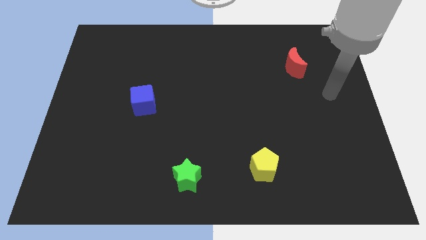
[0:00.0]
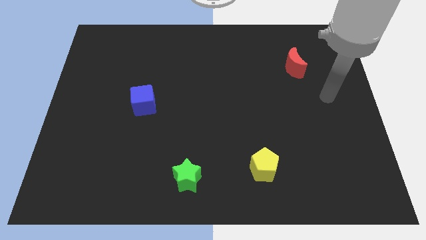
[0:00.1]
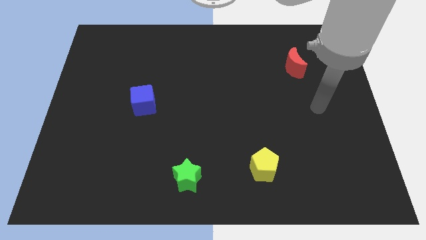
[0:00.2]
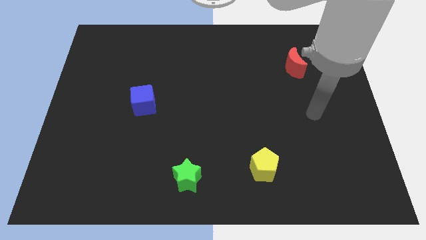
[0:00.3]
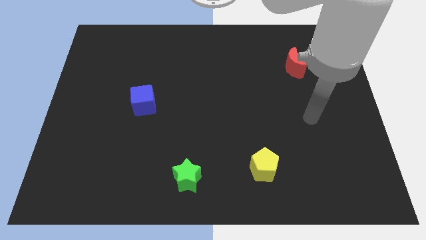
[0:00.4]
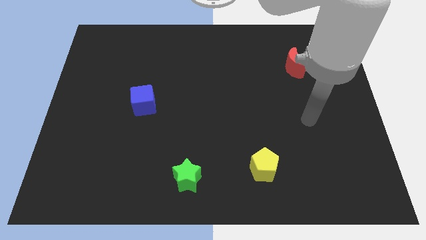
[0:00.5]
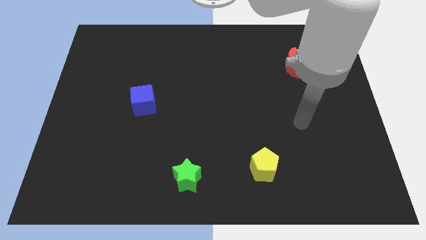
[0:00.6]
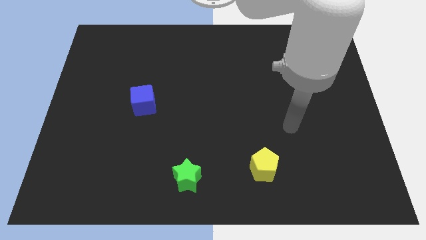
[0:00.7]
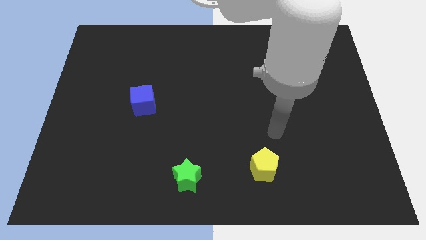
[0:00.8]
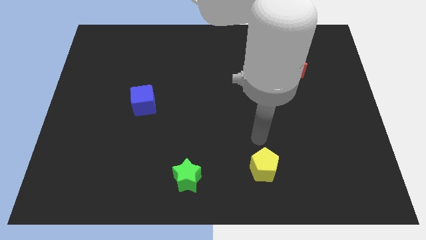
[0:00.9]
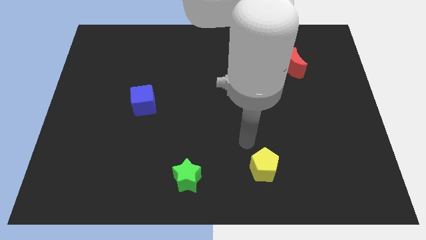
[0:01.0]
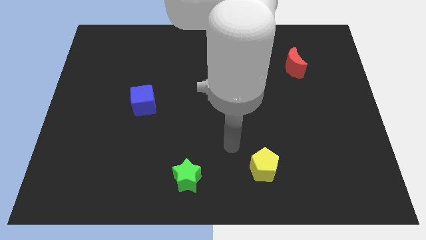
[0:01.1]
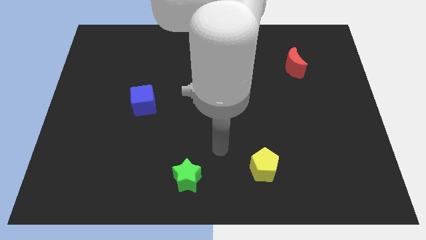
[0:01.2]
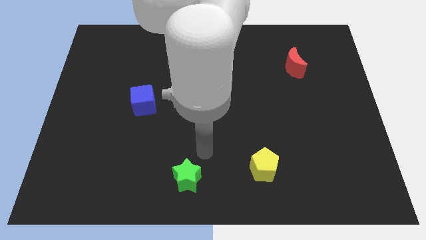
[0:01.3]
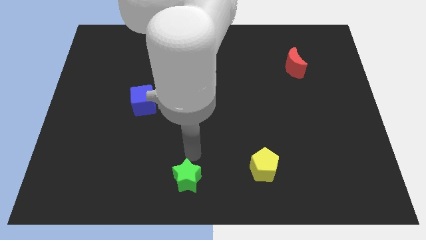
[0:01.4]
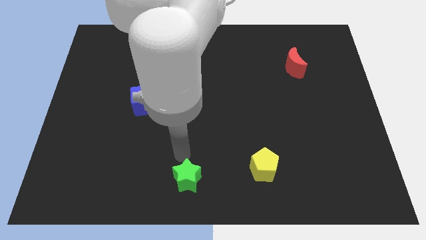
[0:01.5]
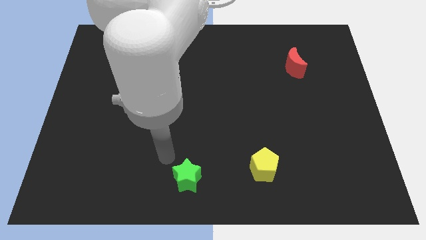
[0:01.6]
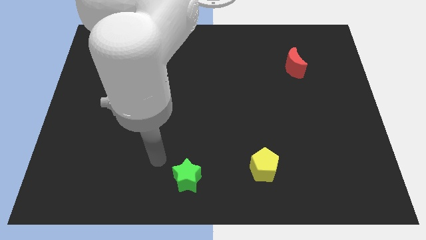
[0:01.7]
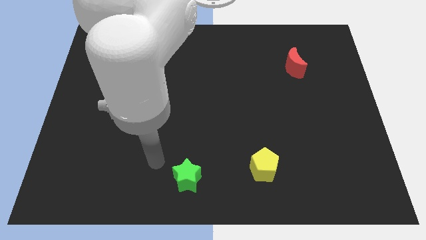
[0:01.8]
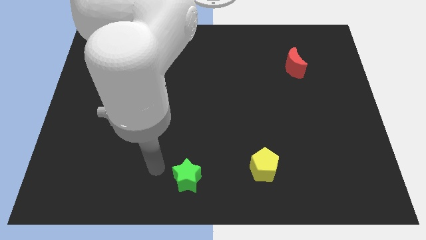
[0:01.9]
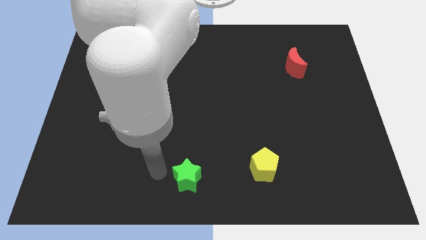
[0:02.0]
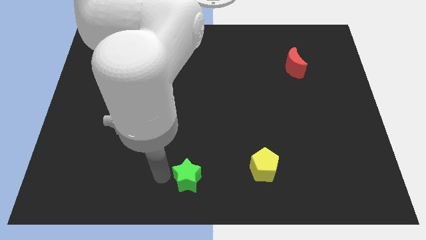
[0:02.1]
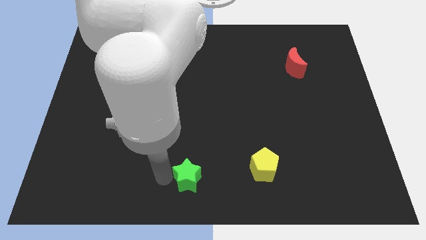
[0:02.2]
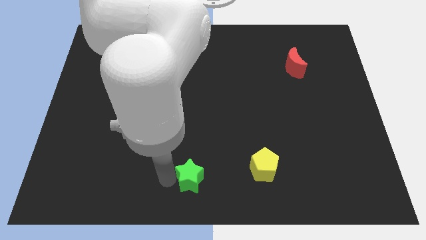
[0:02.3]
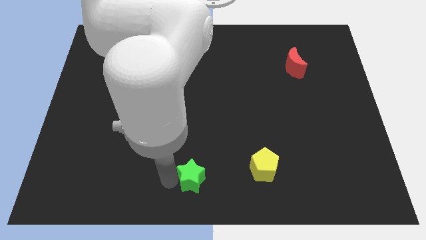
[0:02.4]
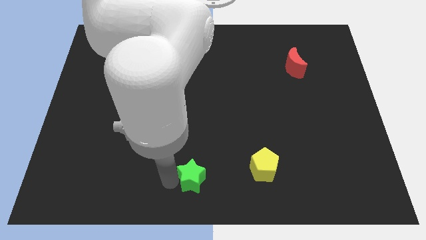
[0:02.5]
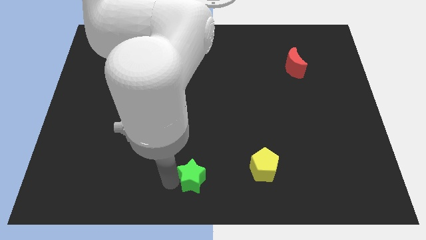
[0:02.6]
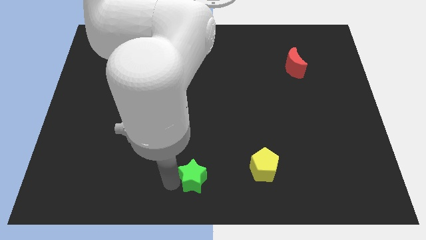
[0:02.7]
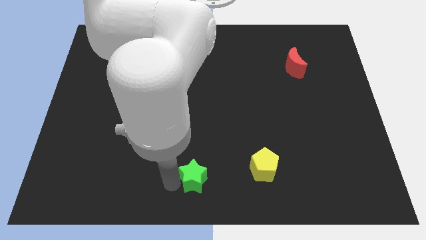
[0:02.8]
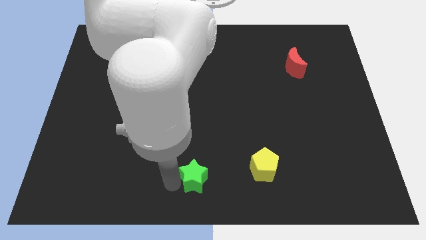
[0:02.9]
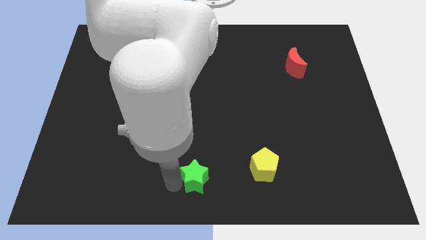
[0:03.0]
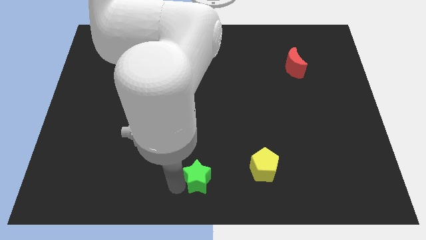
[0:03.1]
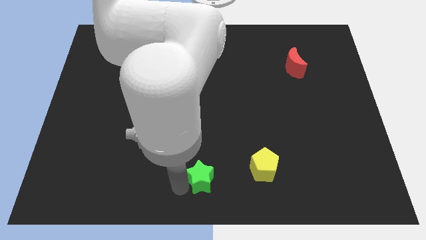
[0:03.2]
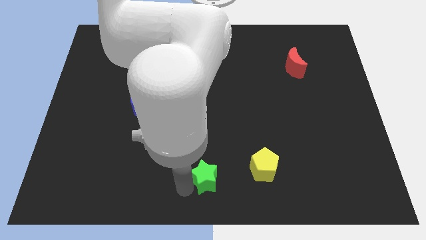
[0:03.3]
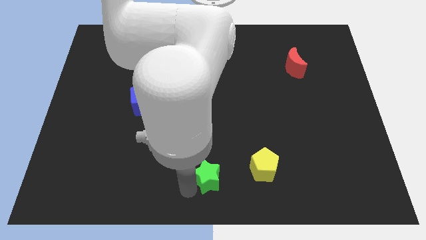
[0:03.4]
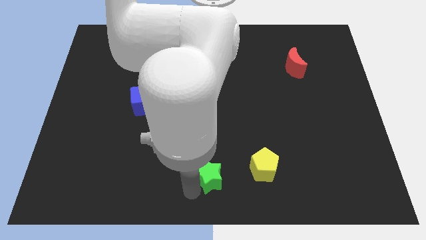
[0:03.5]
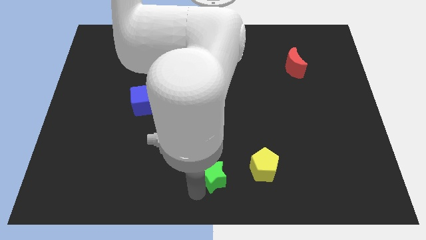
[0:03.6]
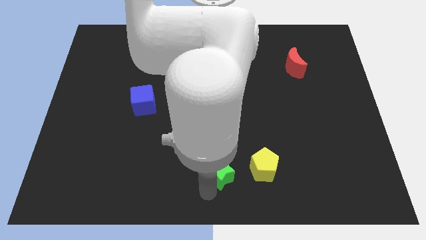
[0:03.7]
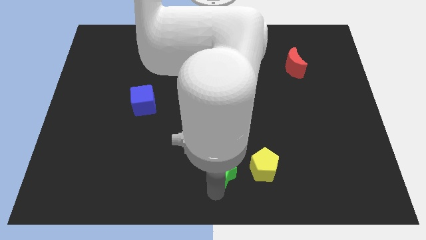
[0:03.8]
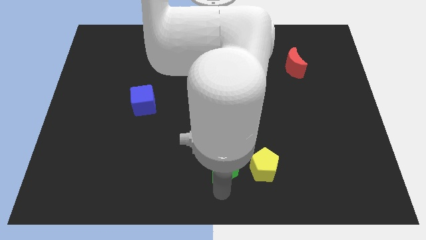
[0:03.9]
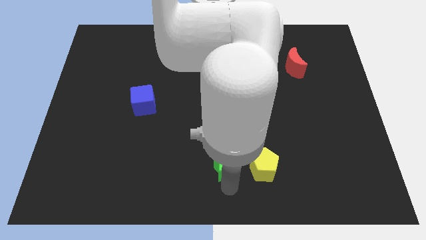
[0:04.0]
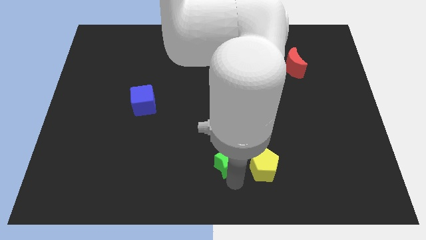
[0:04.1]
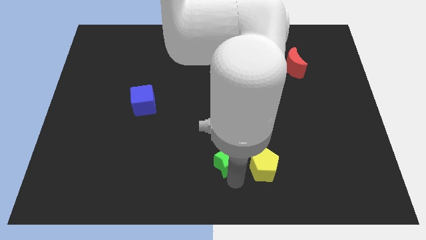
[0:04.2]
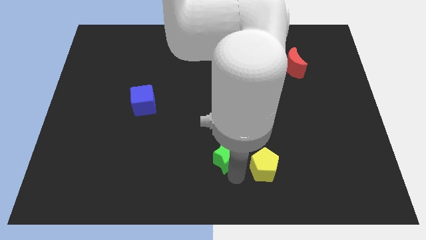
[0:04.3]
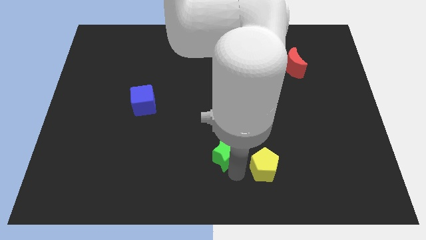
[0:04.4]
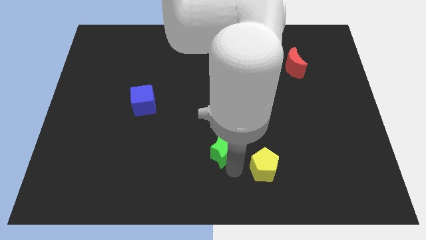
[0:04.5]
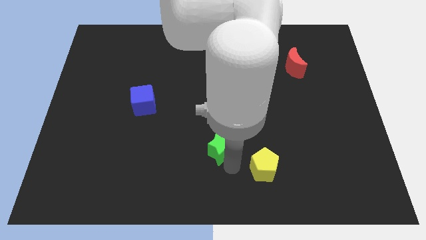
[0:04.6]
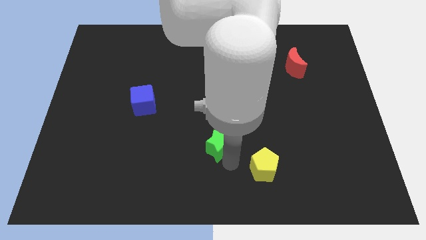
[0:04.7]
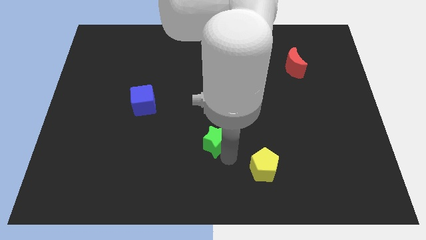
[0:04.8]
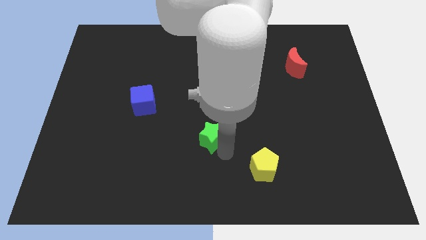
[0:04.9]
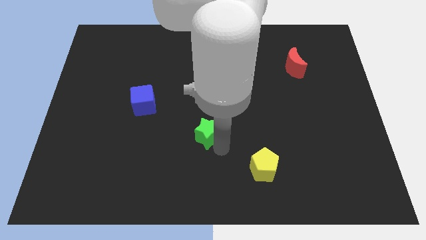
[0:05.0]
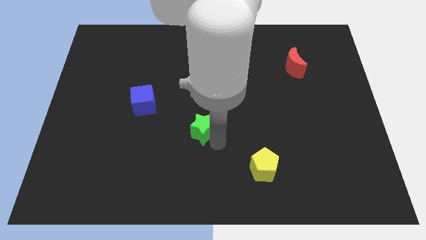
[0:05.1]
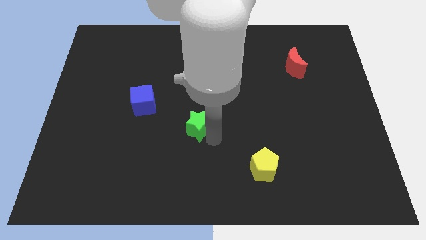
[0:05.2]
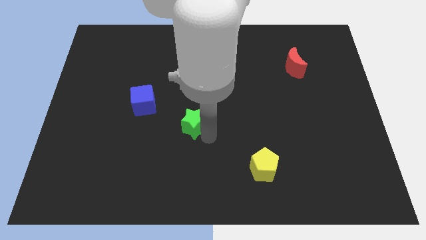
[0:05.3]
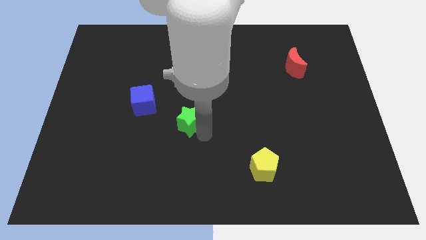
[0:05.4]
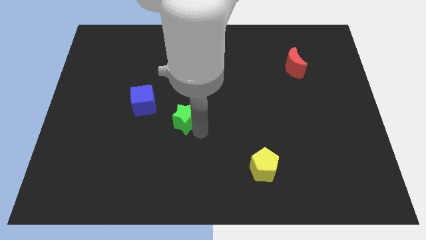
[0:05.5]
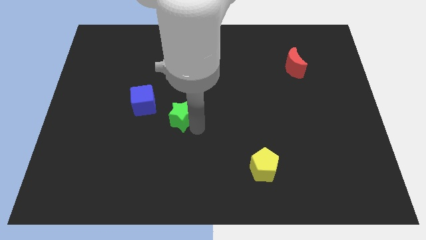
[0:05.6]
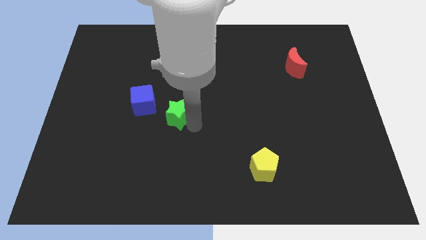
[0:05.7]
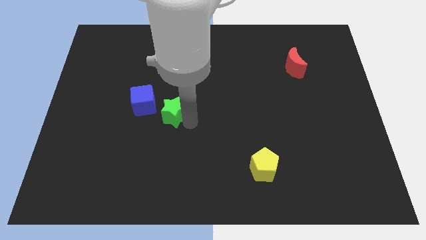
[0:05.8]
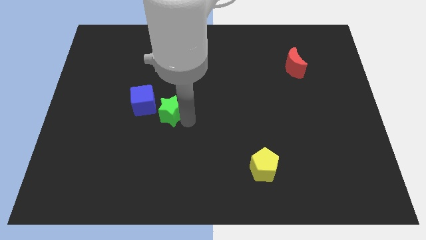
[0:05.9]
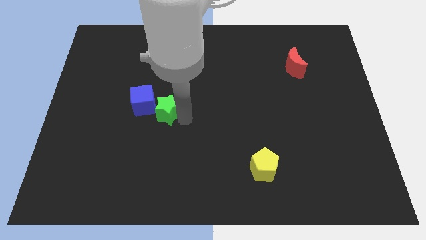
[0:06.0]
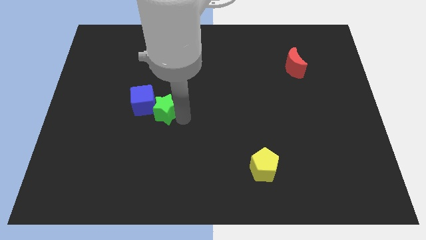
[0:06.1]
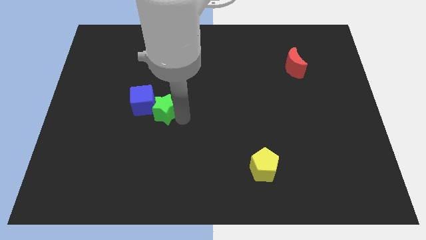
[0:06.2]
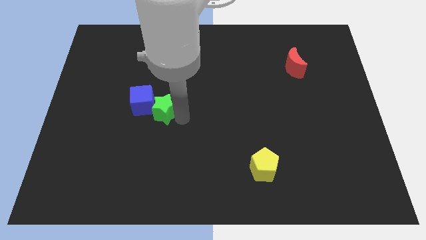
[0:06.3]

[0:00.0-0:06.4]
move the green block to the cube

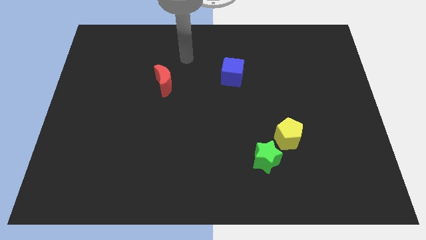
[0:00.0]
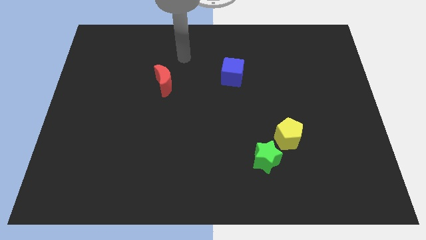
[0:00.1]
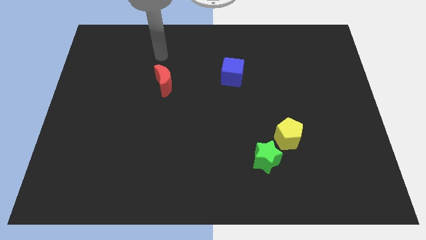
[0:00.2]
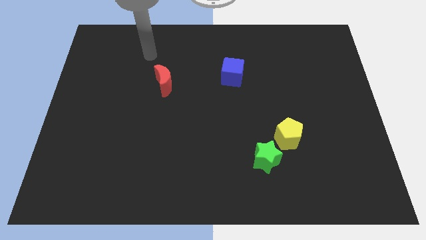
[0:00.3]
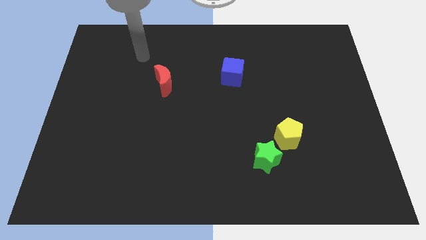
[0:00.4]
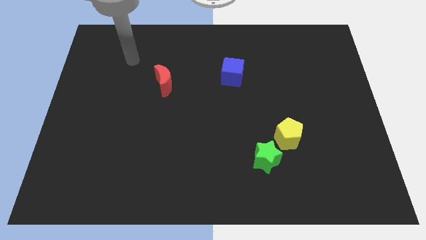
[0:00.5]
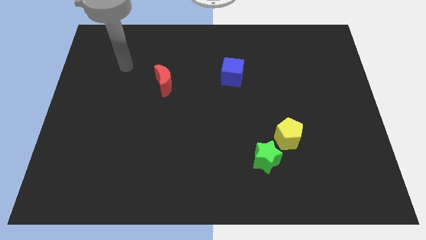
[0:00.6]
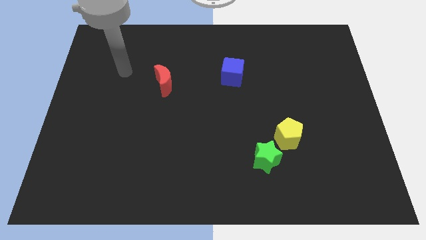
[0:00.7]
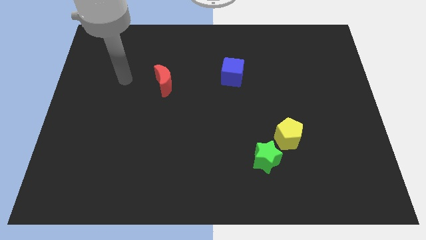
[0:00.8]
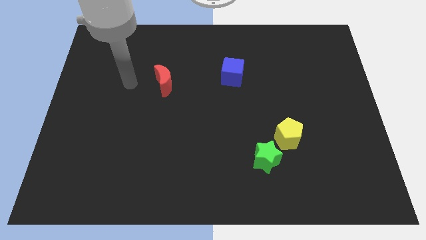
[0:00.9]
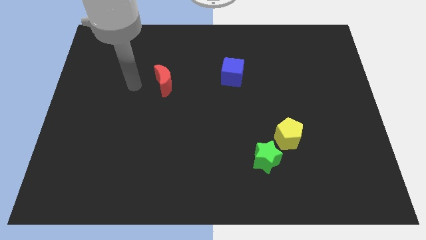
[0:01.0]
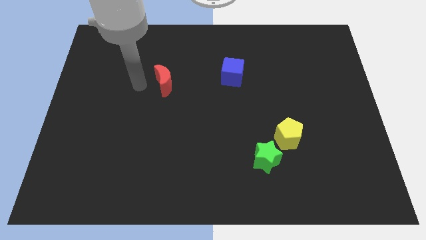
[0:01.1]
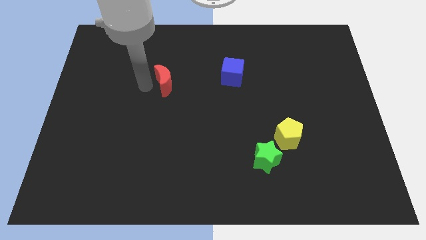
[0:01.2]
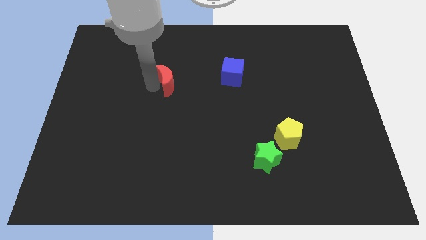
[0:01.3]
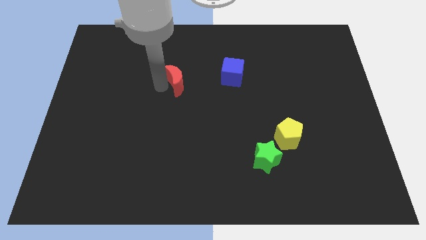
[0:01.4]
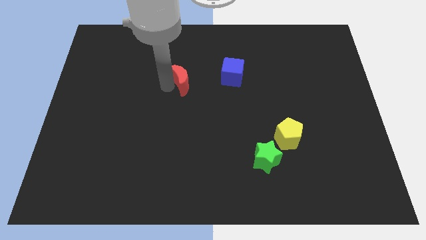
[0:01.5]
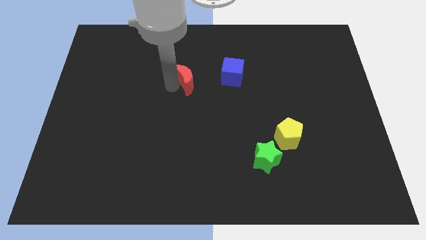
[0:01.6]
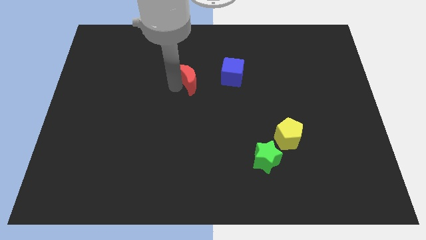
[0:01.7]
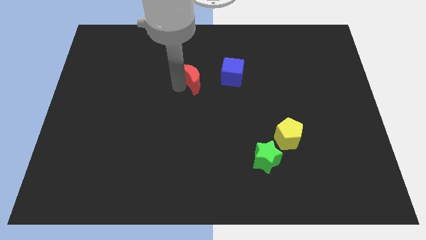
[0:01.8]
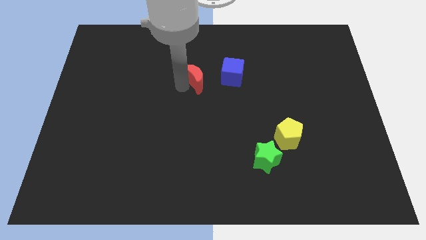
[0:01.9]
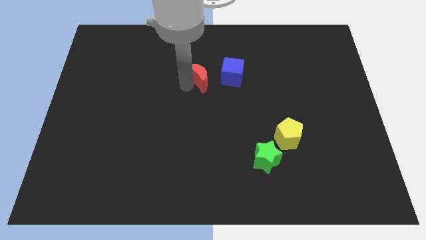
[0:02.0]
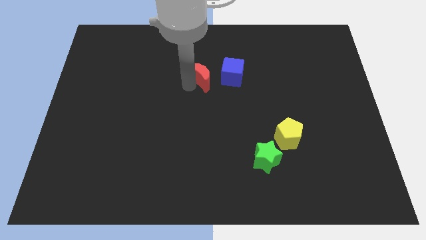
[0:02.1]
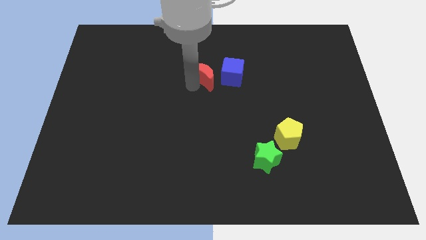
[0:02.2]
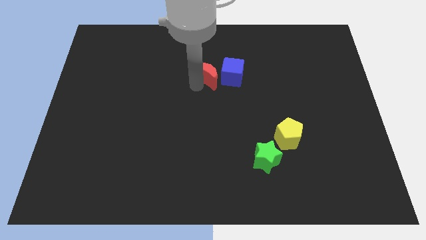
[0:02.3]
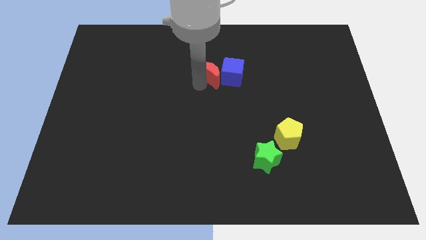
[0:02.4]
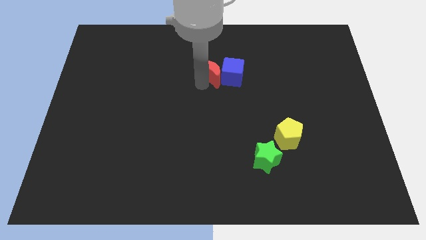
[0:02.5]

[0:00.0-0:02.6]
slide the red block to the cube
